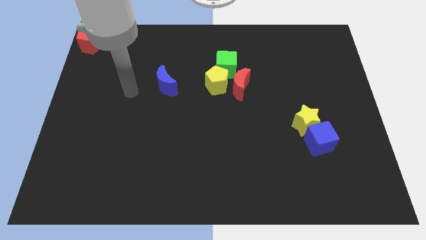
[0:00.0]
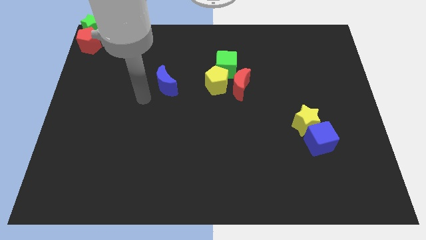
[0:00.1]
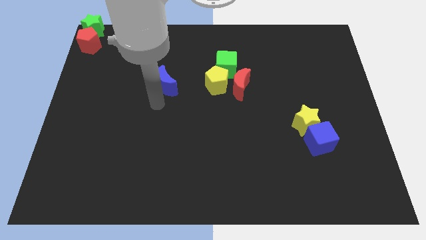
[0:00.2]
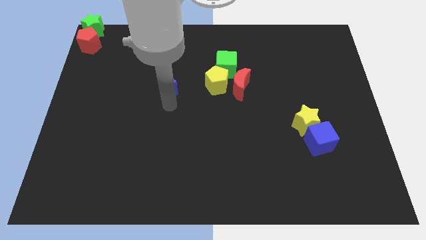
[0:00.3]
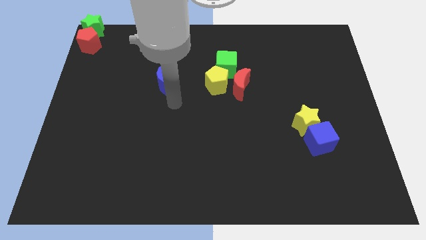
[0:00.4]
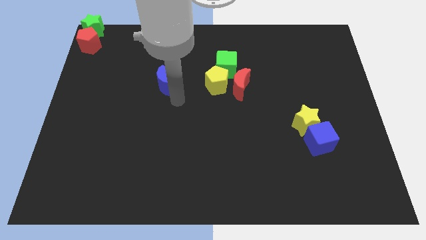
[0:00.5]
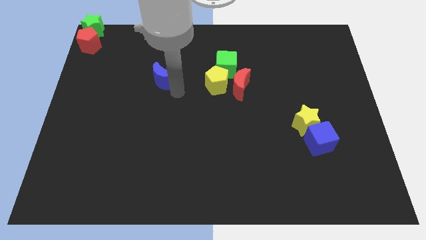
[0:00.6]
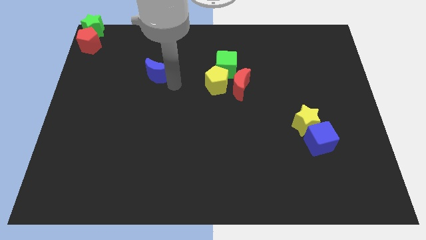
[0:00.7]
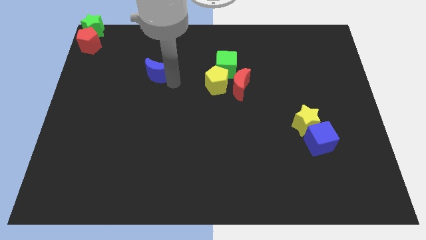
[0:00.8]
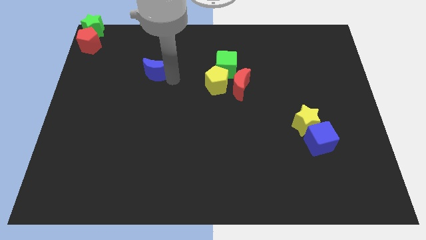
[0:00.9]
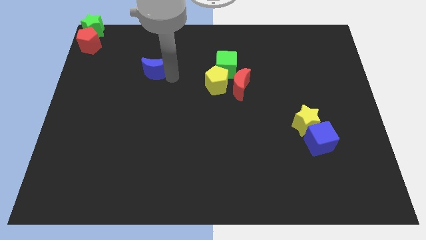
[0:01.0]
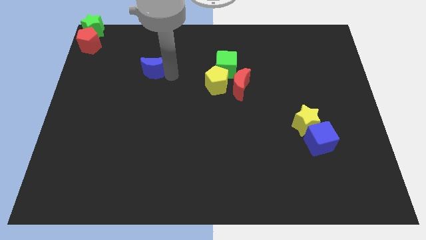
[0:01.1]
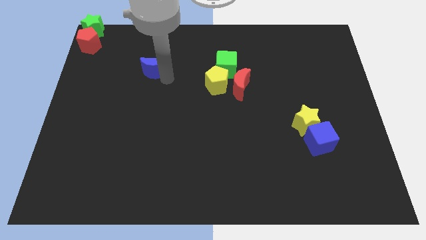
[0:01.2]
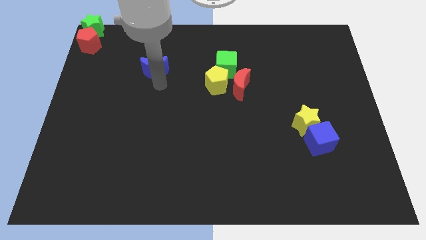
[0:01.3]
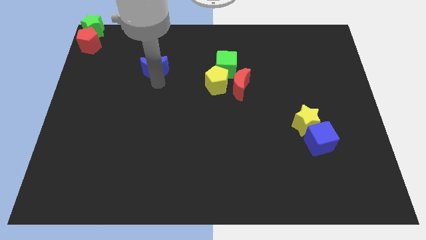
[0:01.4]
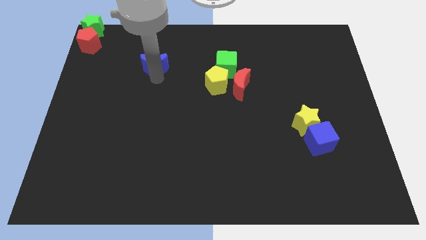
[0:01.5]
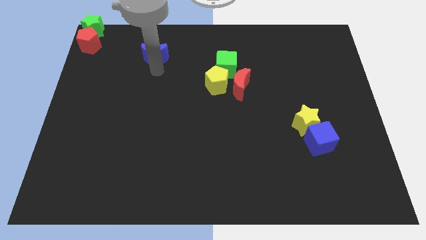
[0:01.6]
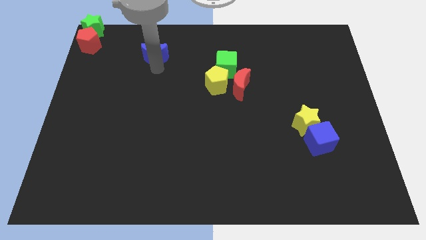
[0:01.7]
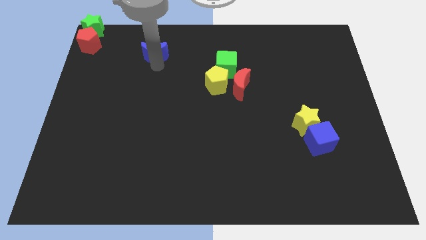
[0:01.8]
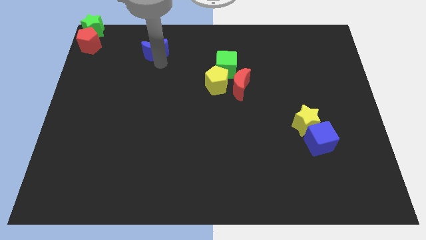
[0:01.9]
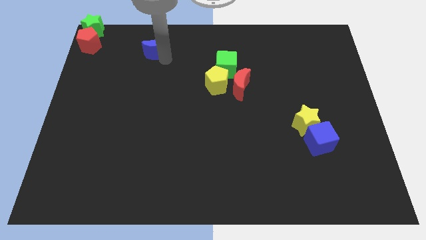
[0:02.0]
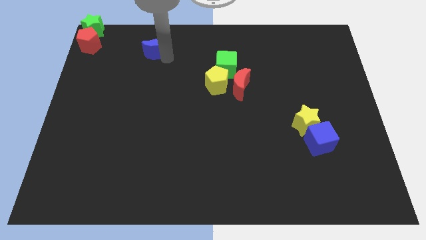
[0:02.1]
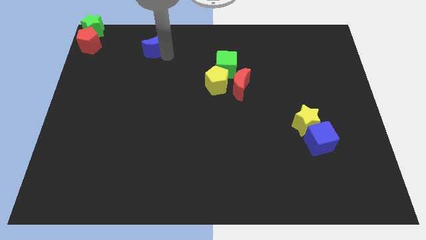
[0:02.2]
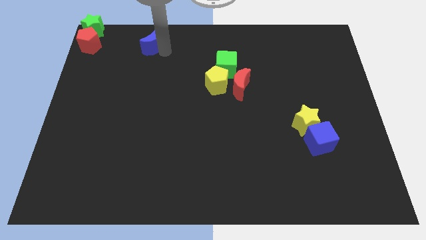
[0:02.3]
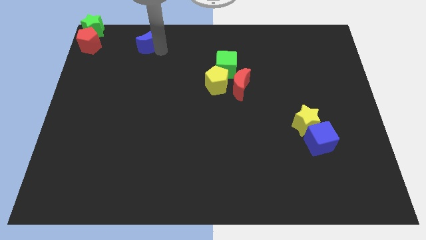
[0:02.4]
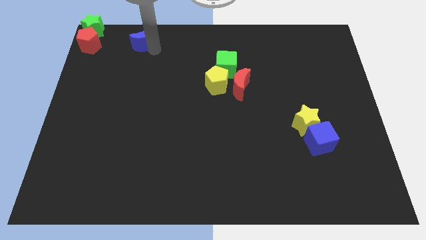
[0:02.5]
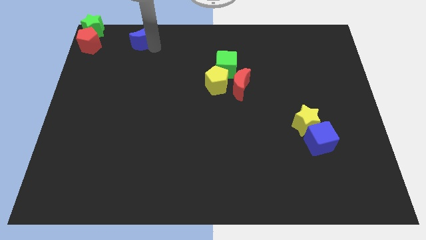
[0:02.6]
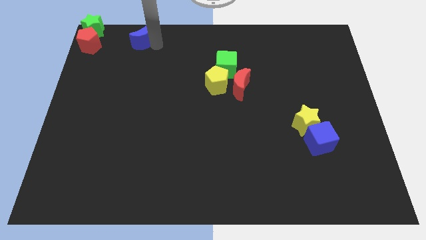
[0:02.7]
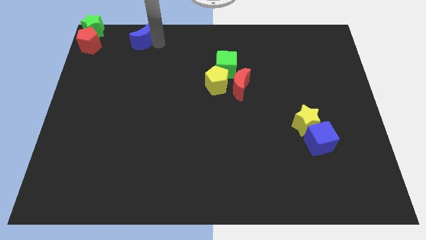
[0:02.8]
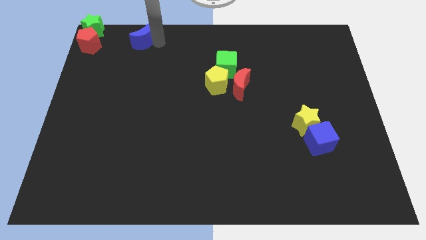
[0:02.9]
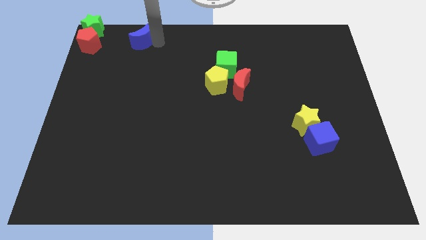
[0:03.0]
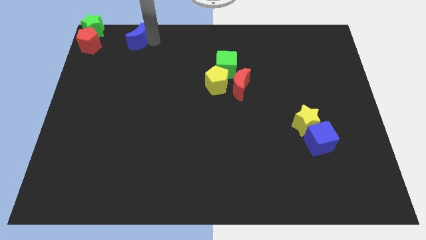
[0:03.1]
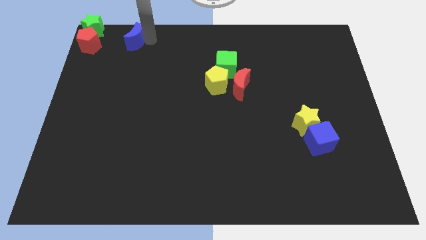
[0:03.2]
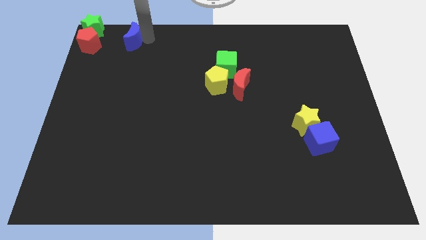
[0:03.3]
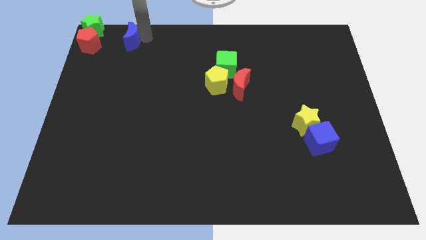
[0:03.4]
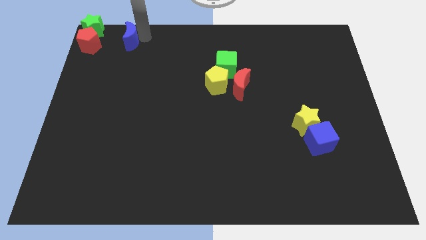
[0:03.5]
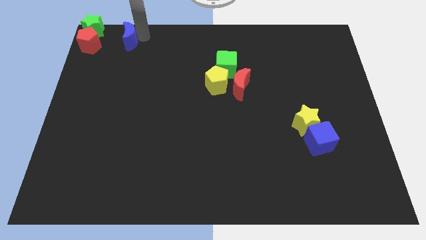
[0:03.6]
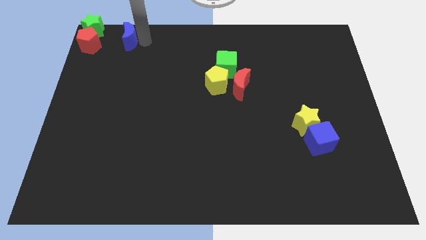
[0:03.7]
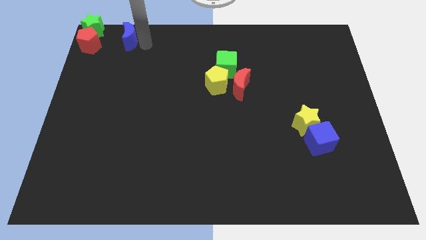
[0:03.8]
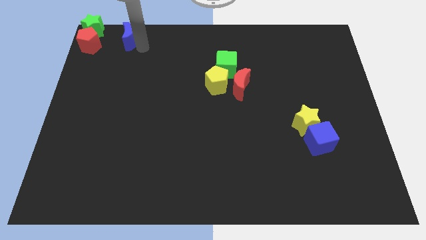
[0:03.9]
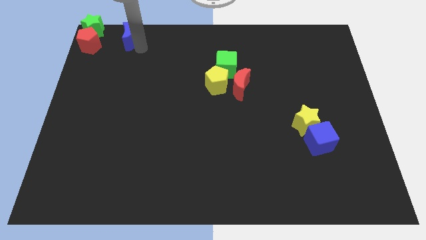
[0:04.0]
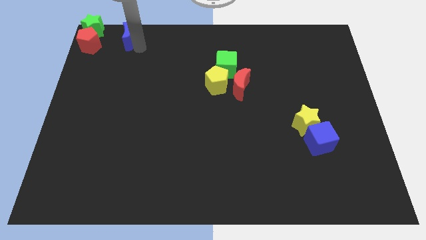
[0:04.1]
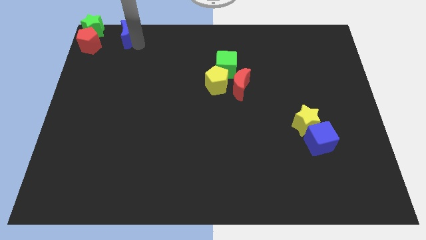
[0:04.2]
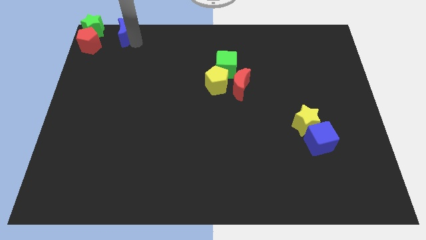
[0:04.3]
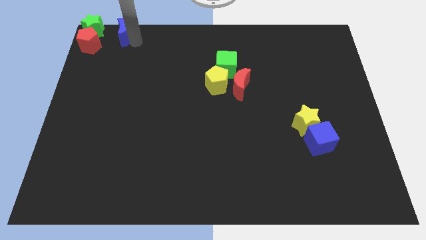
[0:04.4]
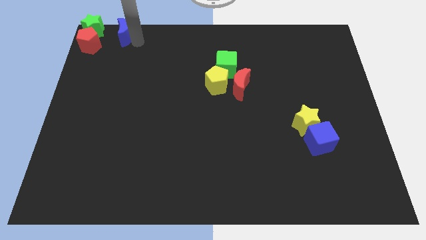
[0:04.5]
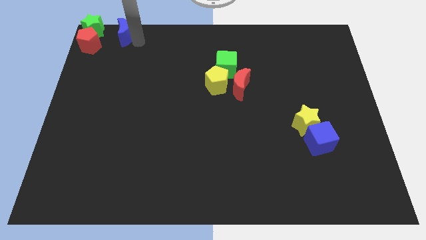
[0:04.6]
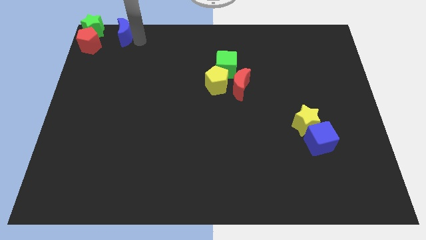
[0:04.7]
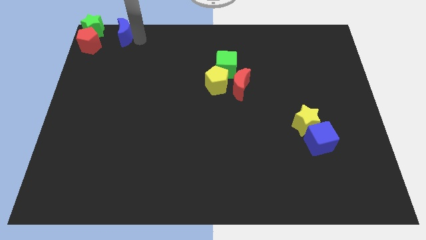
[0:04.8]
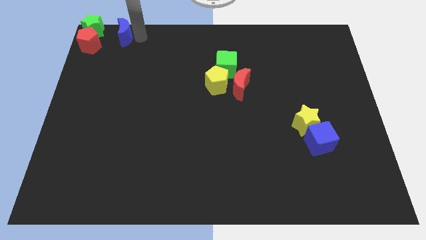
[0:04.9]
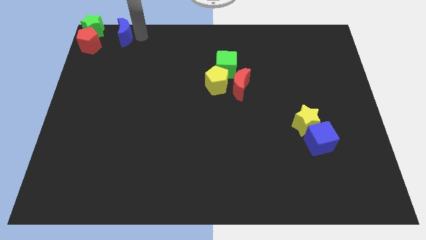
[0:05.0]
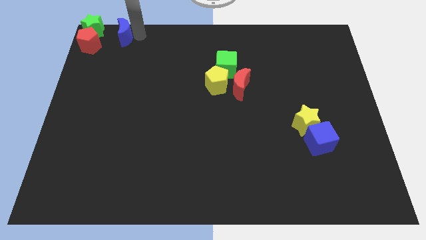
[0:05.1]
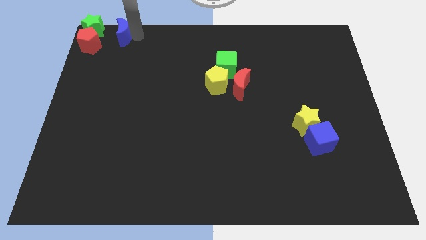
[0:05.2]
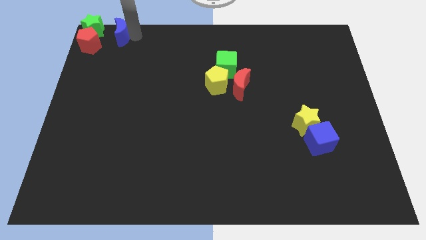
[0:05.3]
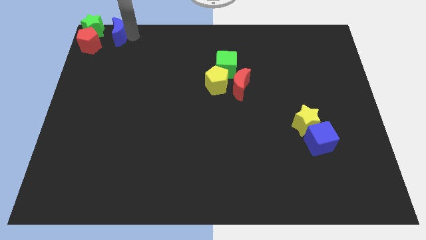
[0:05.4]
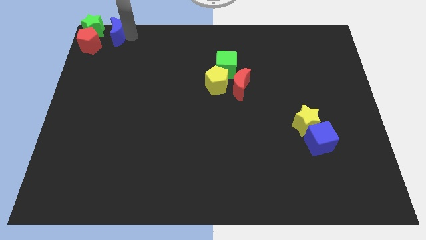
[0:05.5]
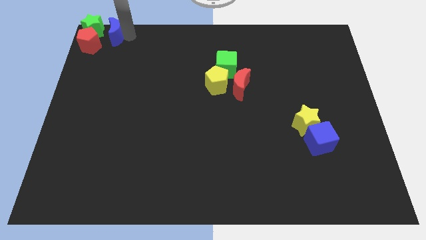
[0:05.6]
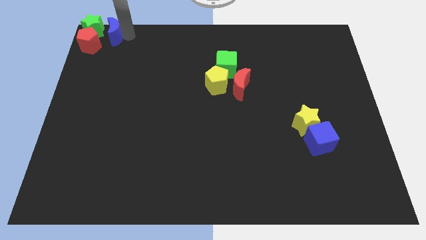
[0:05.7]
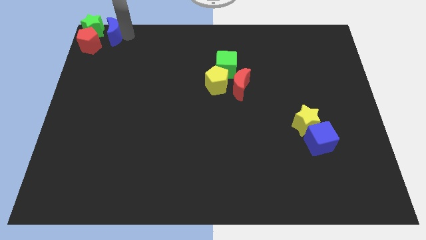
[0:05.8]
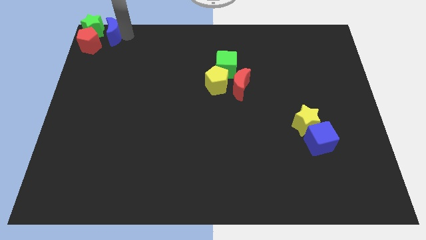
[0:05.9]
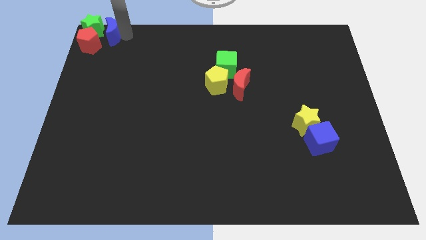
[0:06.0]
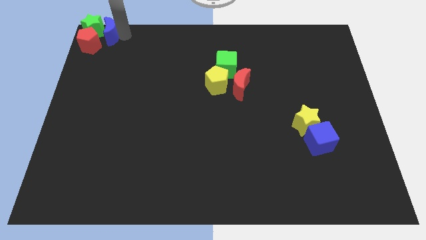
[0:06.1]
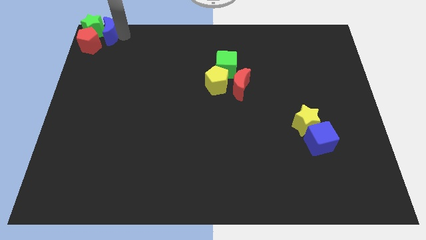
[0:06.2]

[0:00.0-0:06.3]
push the blue moon towards the top left corner of the board

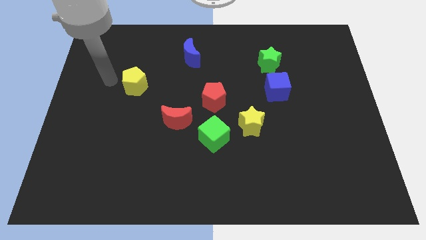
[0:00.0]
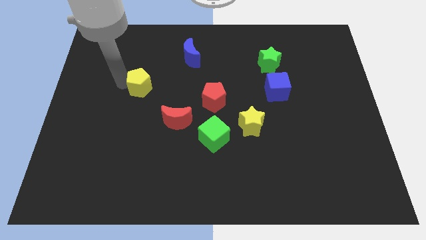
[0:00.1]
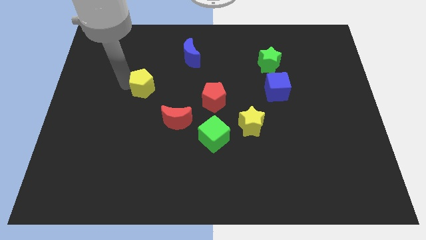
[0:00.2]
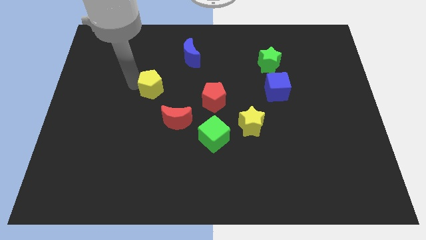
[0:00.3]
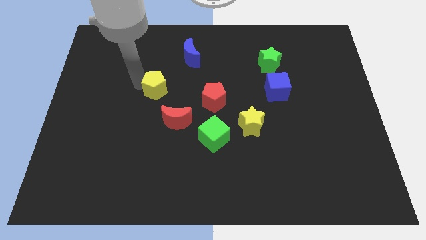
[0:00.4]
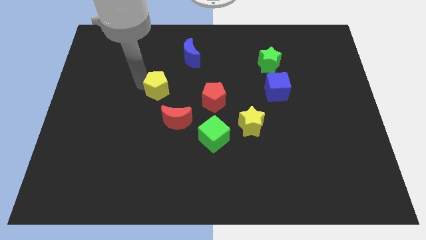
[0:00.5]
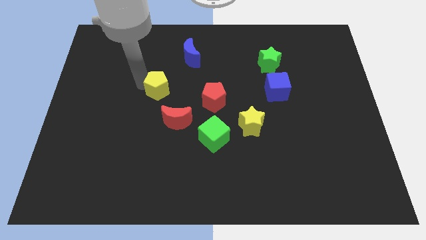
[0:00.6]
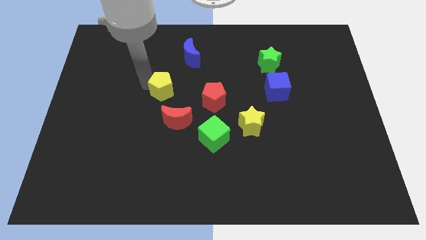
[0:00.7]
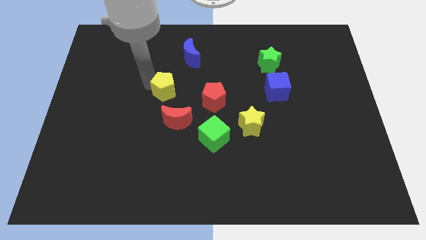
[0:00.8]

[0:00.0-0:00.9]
move the yellow pentagon towards the left of red pentagon

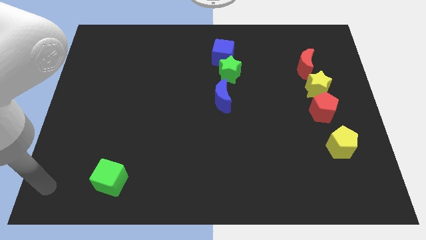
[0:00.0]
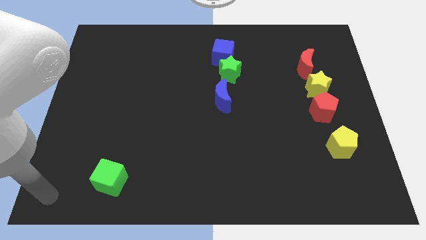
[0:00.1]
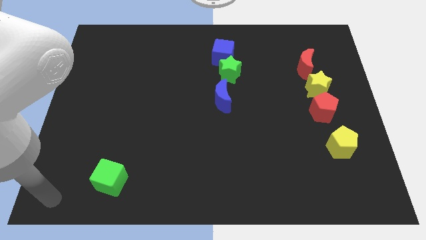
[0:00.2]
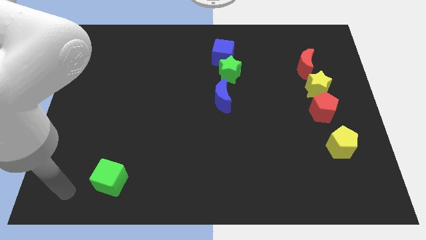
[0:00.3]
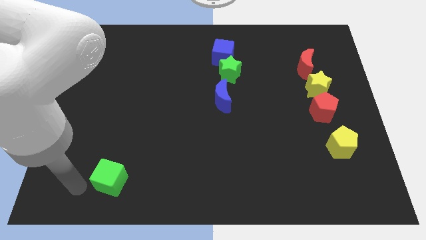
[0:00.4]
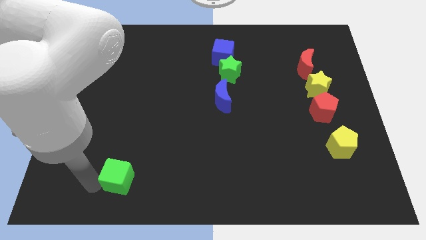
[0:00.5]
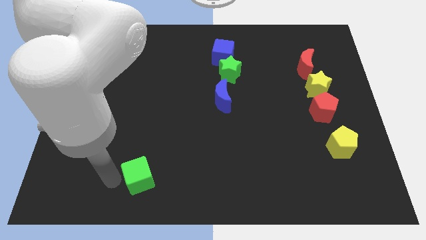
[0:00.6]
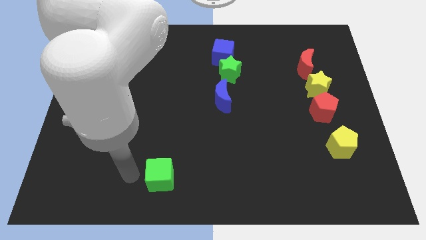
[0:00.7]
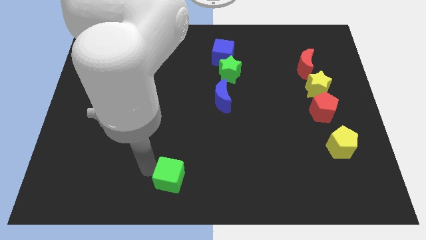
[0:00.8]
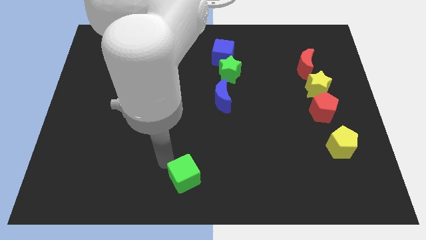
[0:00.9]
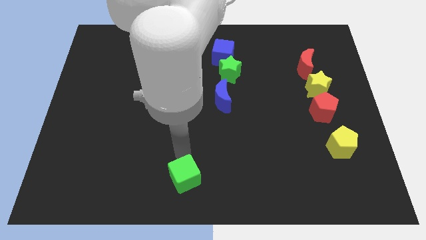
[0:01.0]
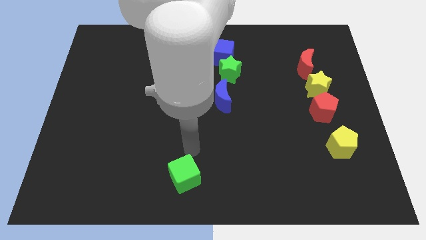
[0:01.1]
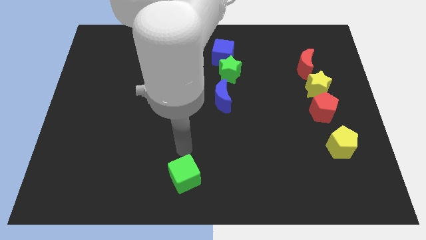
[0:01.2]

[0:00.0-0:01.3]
push the green cube to the right

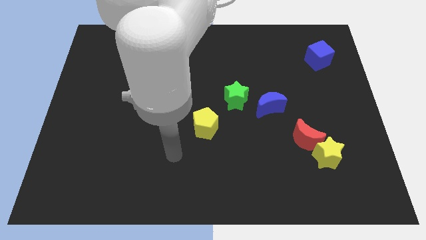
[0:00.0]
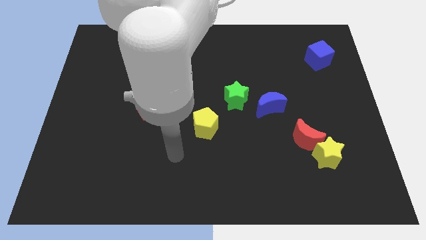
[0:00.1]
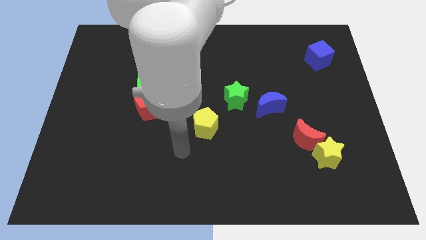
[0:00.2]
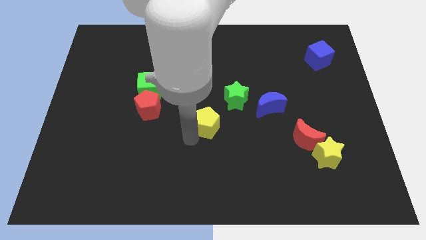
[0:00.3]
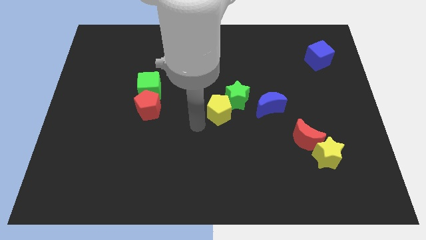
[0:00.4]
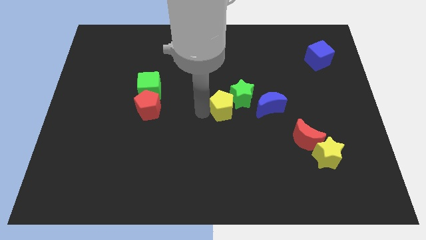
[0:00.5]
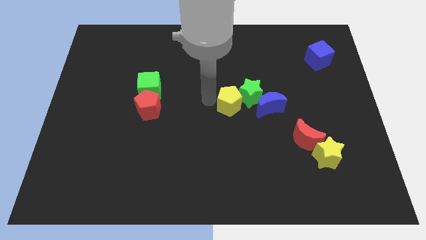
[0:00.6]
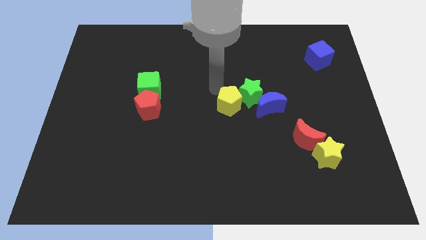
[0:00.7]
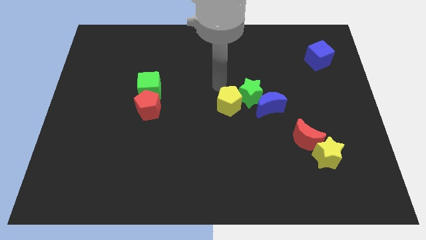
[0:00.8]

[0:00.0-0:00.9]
push the yellow pentagon into green star
